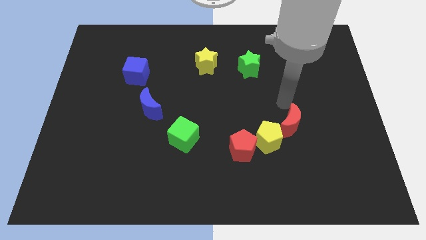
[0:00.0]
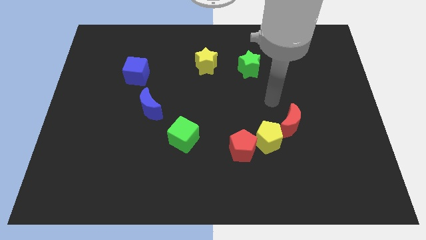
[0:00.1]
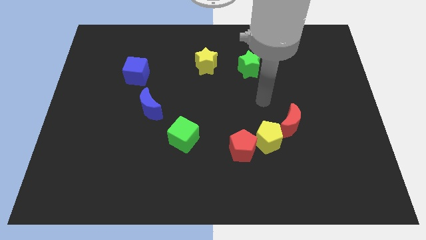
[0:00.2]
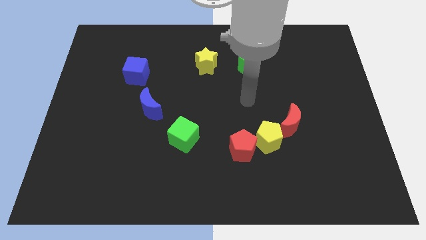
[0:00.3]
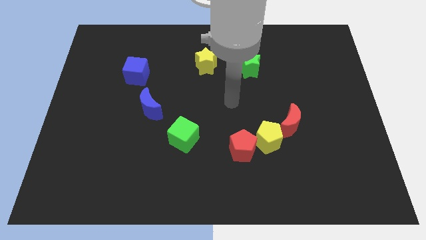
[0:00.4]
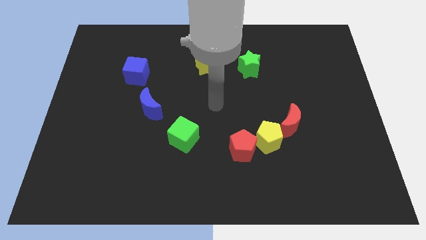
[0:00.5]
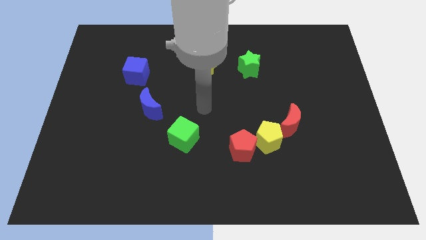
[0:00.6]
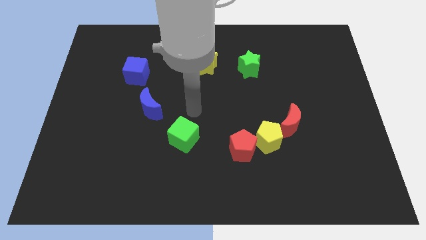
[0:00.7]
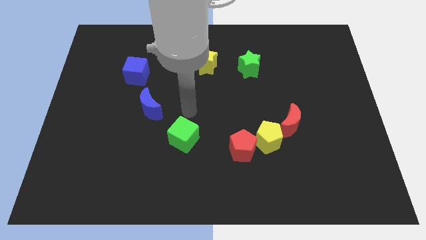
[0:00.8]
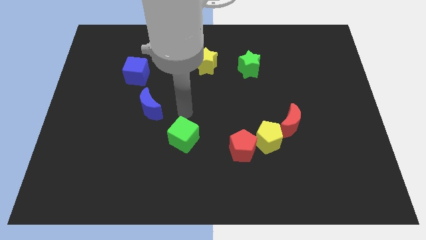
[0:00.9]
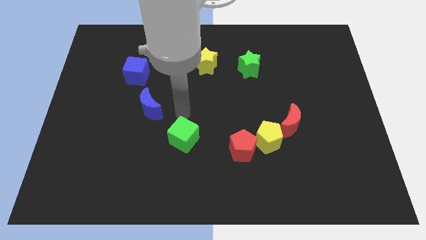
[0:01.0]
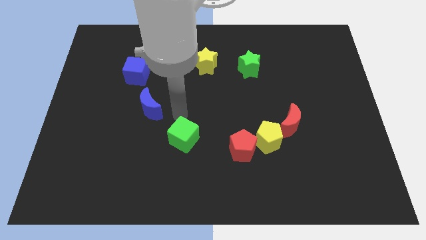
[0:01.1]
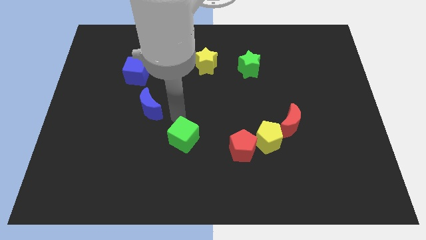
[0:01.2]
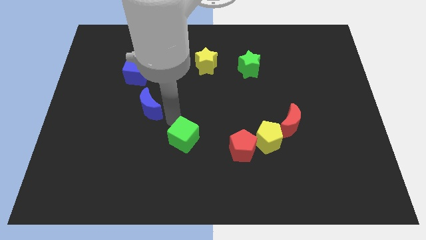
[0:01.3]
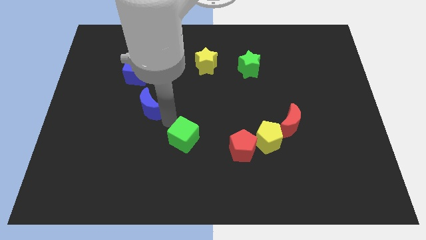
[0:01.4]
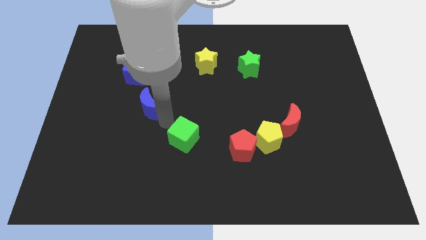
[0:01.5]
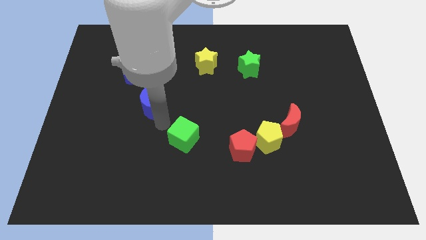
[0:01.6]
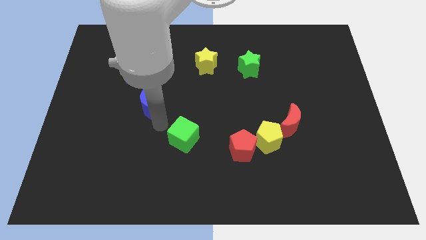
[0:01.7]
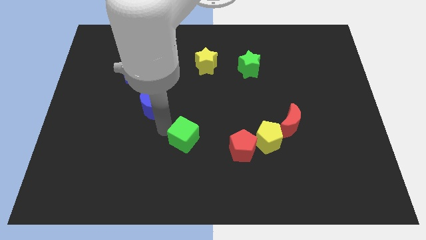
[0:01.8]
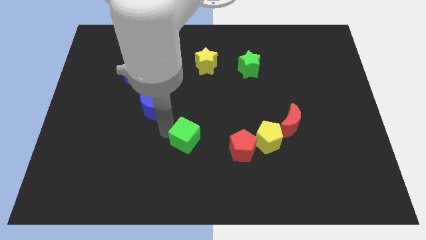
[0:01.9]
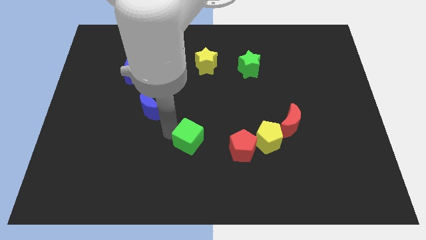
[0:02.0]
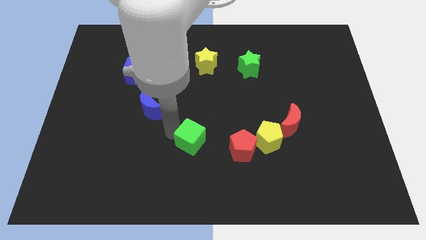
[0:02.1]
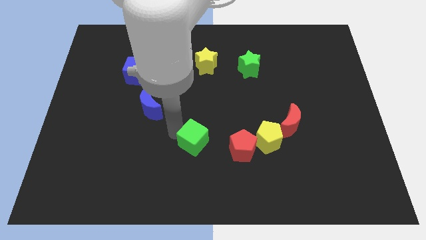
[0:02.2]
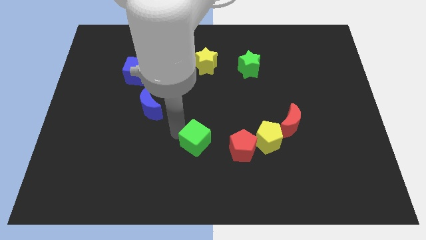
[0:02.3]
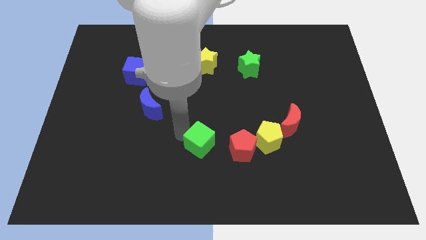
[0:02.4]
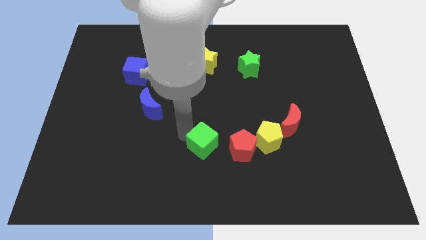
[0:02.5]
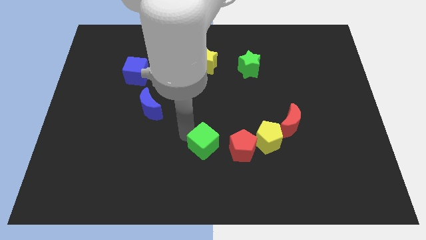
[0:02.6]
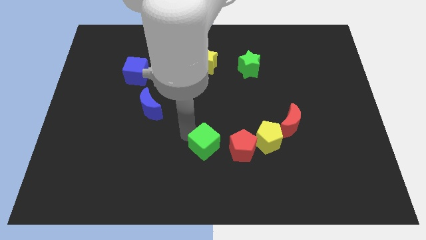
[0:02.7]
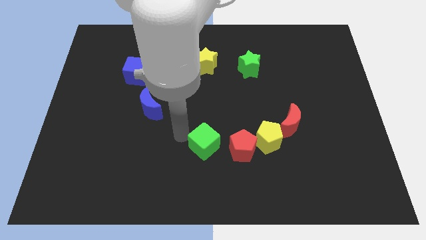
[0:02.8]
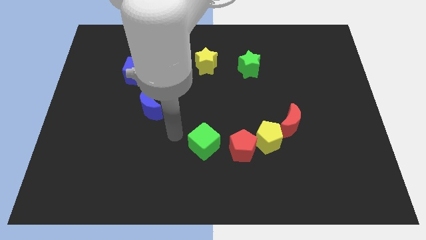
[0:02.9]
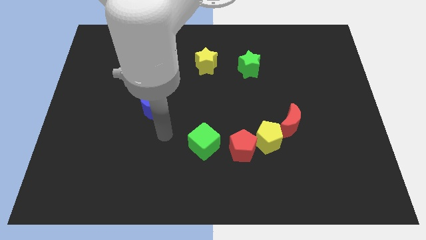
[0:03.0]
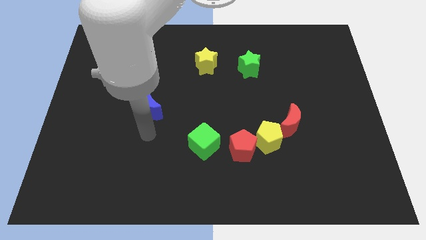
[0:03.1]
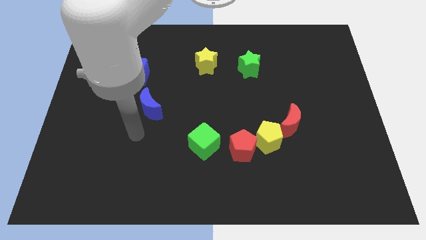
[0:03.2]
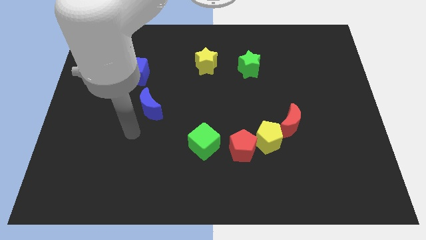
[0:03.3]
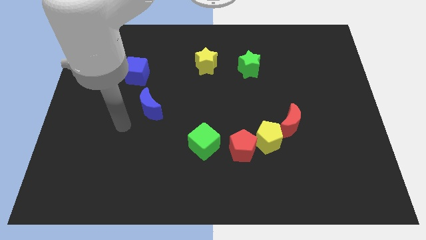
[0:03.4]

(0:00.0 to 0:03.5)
push the green cube near to the red pentagon

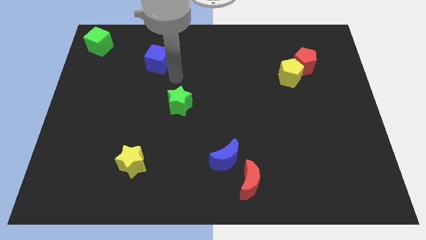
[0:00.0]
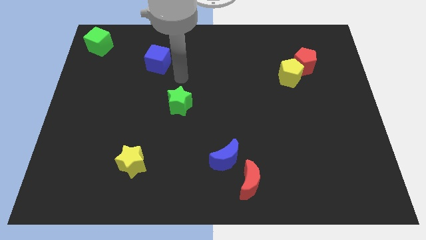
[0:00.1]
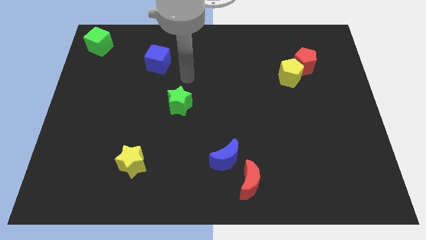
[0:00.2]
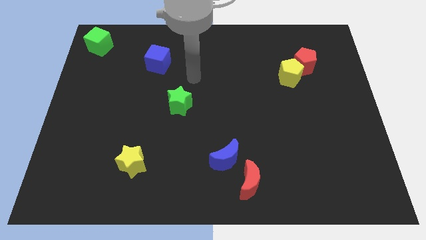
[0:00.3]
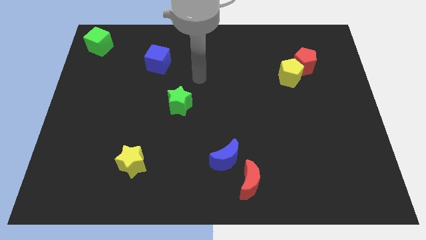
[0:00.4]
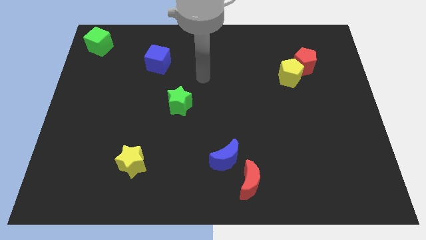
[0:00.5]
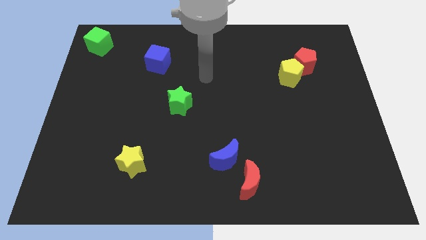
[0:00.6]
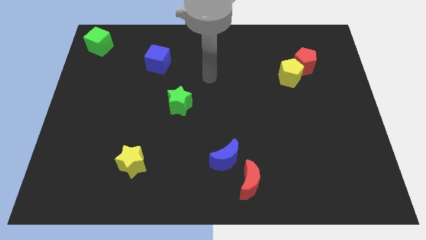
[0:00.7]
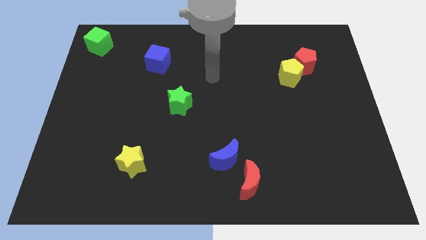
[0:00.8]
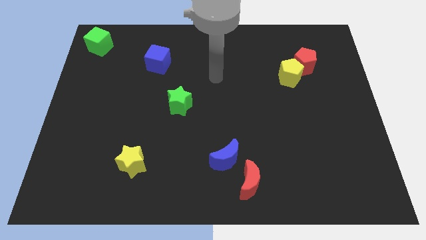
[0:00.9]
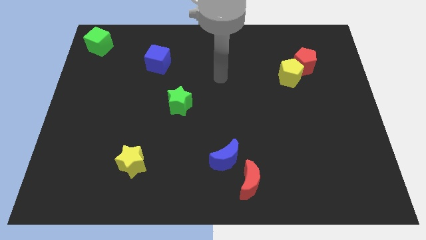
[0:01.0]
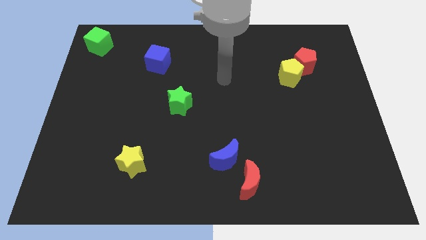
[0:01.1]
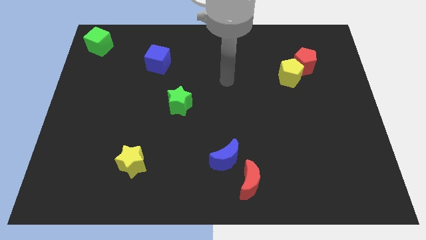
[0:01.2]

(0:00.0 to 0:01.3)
move your arm to the center of the board

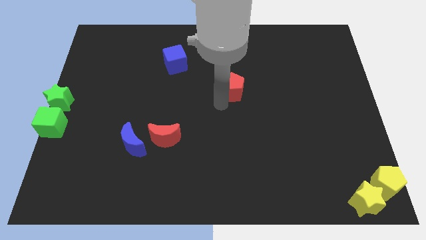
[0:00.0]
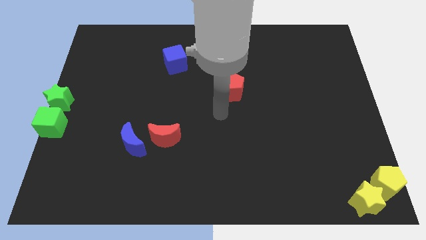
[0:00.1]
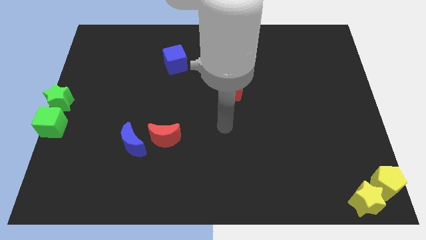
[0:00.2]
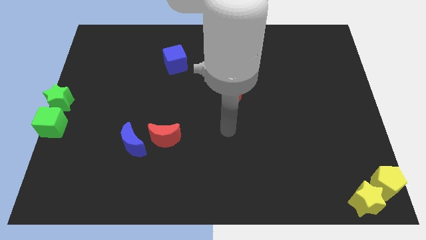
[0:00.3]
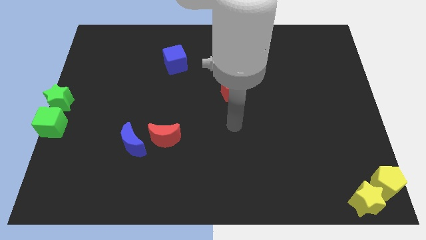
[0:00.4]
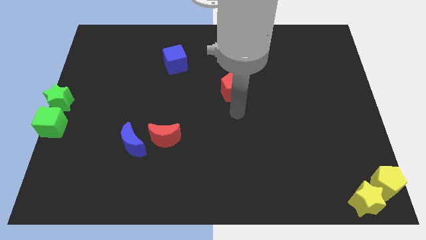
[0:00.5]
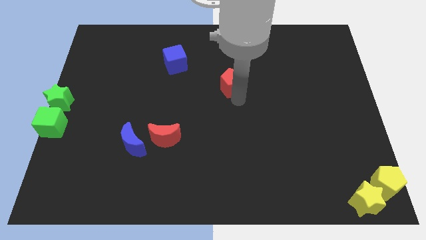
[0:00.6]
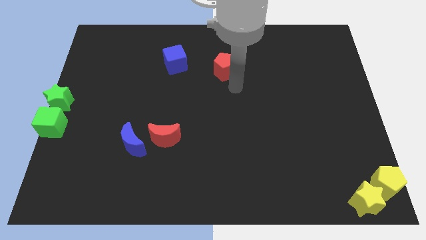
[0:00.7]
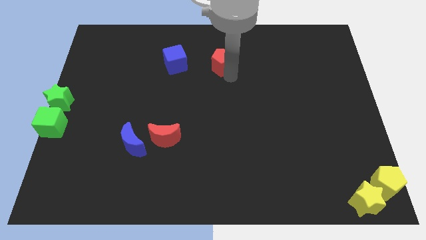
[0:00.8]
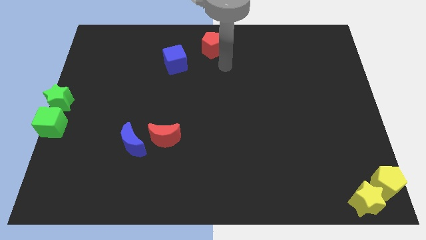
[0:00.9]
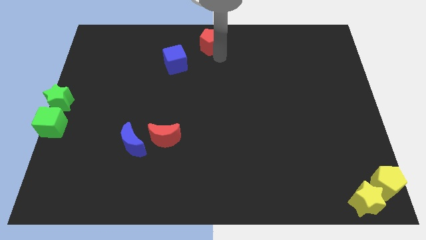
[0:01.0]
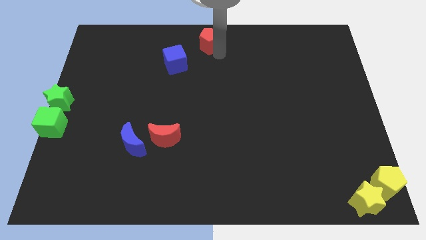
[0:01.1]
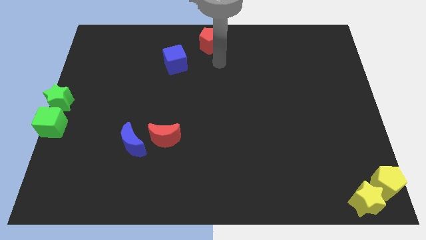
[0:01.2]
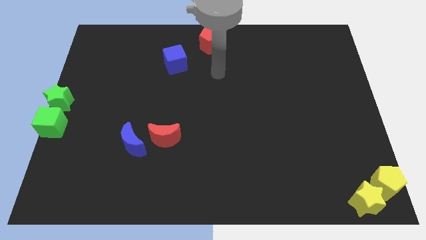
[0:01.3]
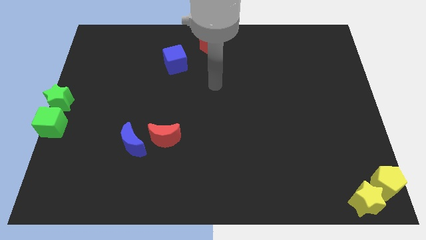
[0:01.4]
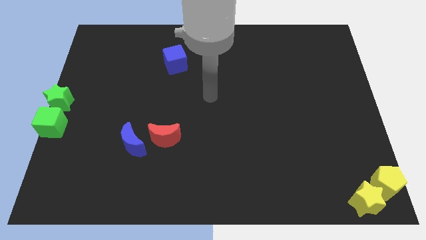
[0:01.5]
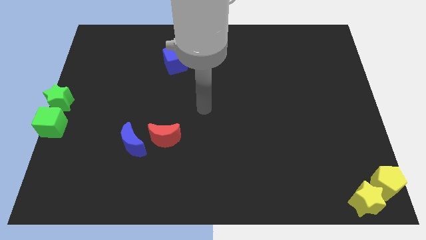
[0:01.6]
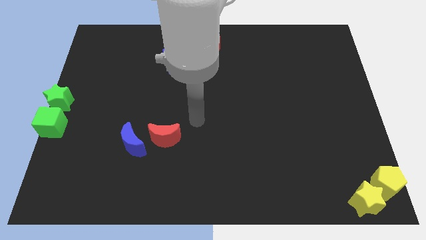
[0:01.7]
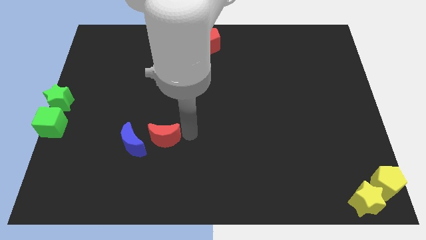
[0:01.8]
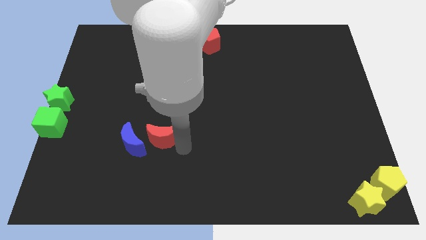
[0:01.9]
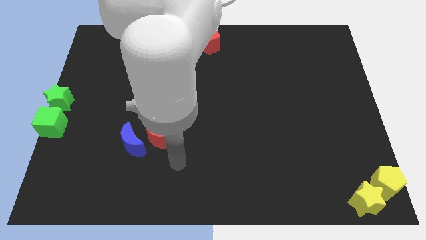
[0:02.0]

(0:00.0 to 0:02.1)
place the red pentagon at the top center

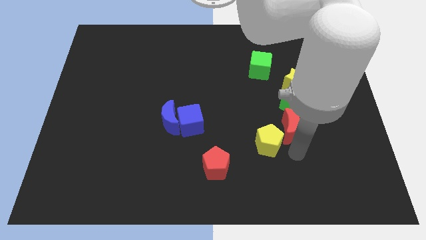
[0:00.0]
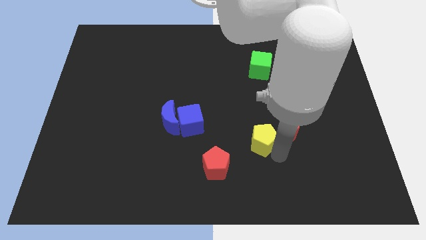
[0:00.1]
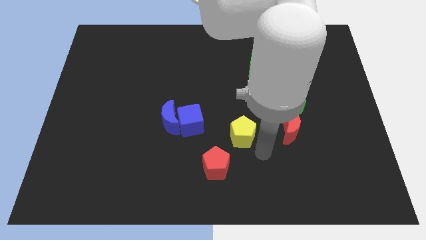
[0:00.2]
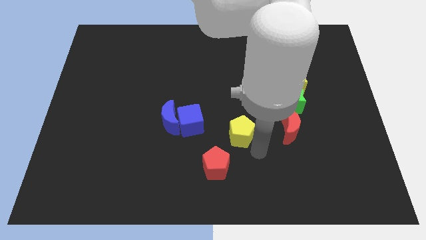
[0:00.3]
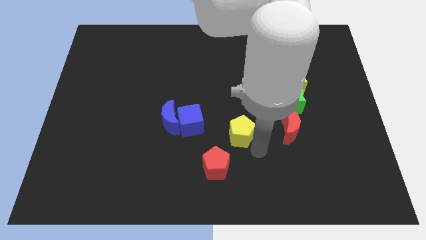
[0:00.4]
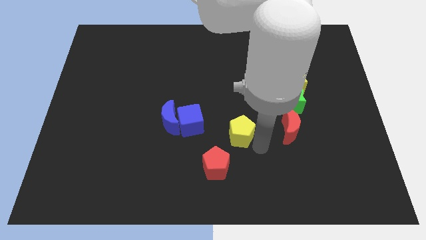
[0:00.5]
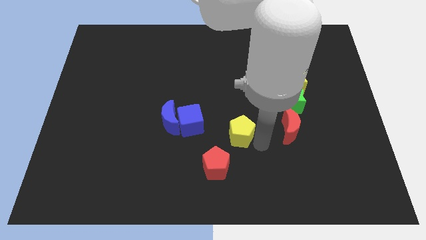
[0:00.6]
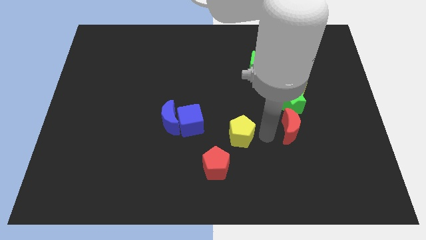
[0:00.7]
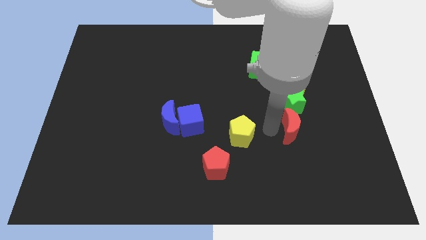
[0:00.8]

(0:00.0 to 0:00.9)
separate the red crescent and the yellow pentagon

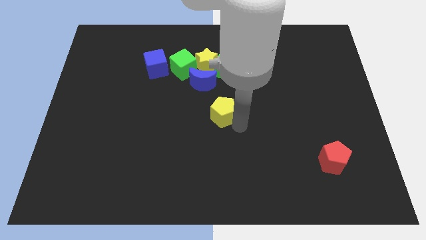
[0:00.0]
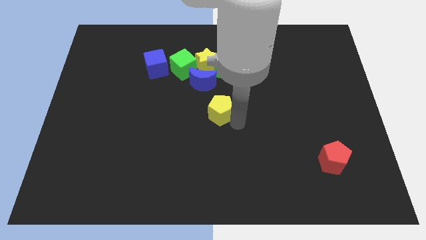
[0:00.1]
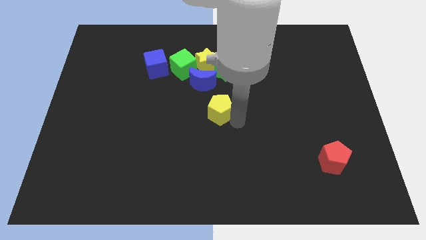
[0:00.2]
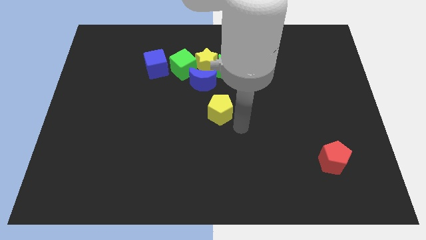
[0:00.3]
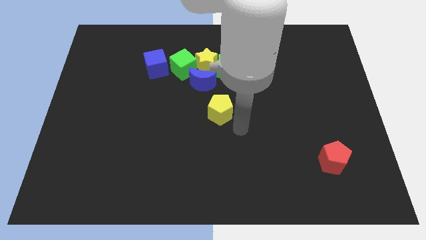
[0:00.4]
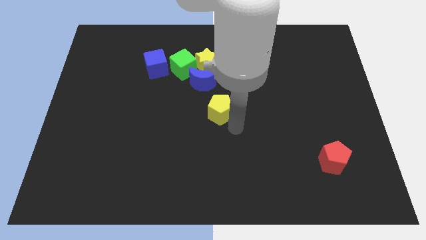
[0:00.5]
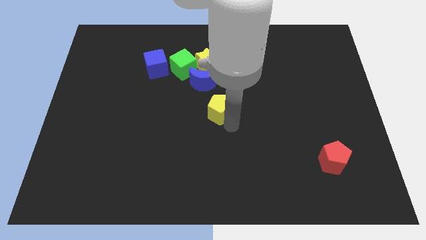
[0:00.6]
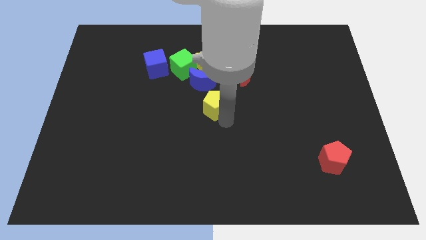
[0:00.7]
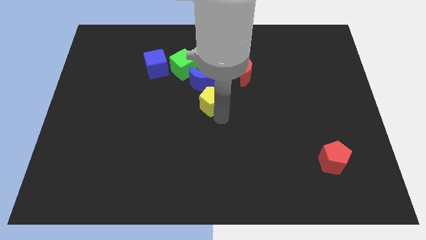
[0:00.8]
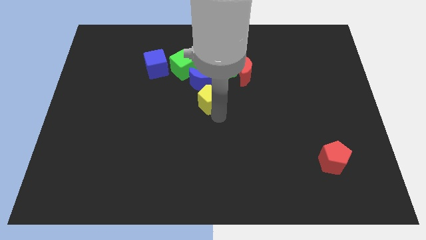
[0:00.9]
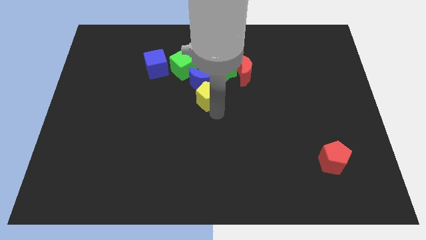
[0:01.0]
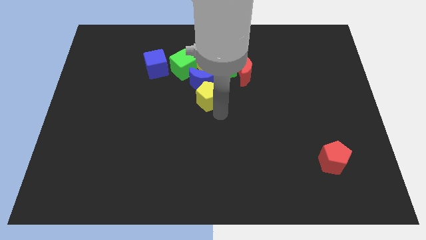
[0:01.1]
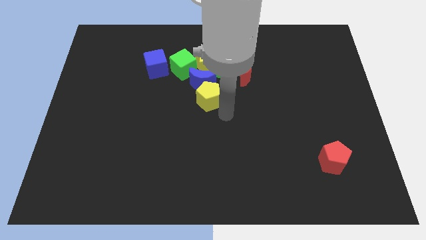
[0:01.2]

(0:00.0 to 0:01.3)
place the yellow pentagon below the blue crescent
